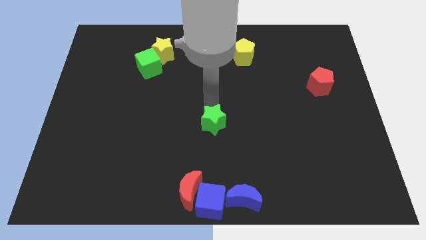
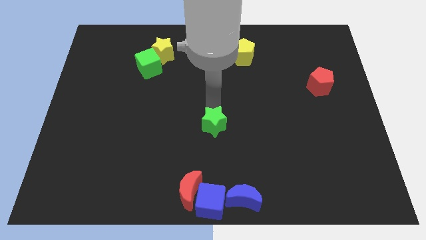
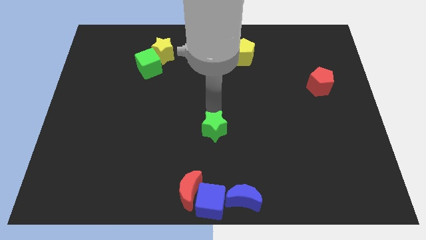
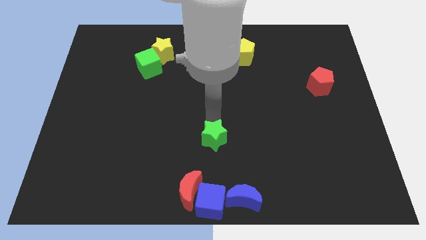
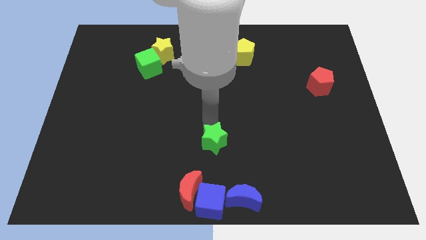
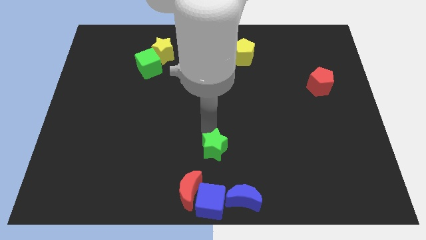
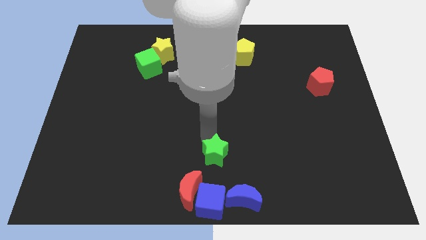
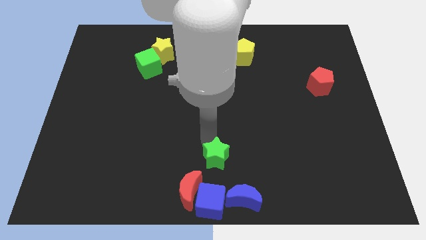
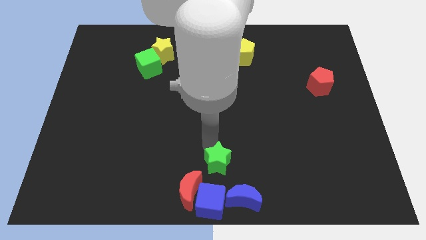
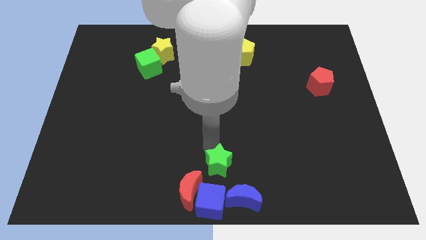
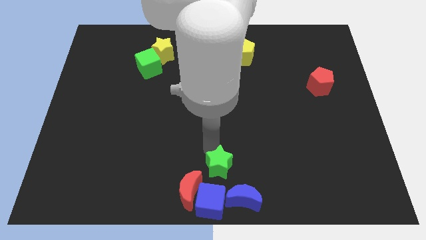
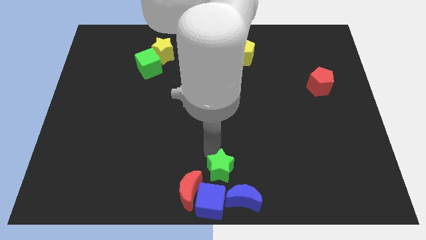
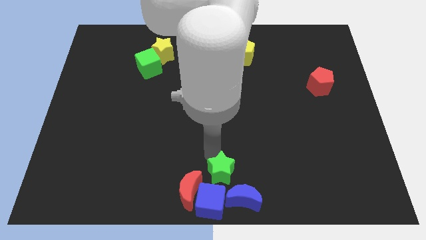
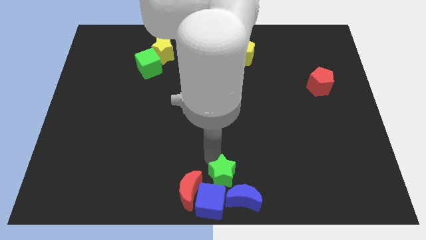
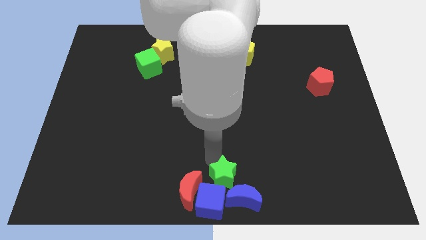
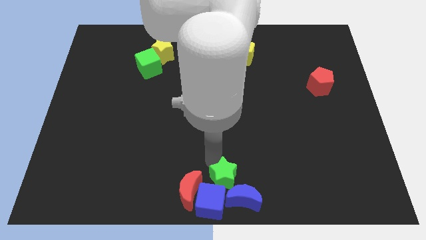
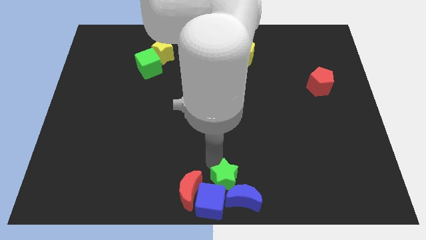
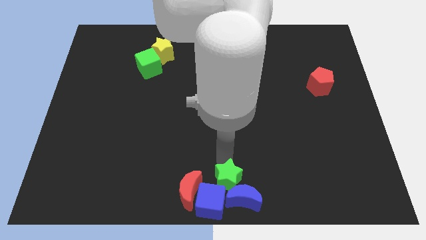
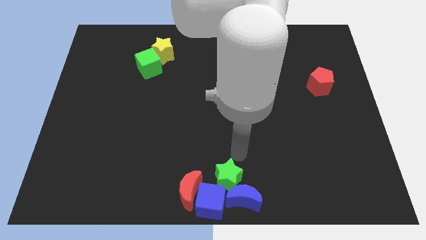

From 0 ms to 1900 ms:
drag the green star close to the blue blocks

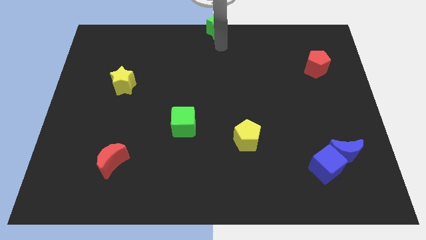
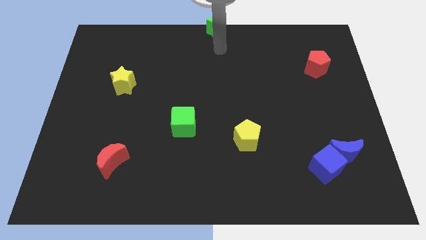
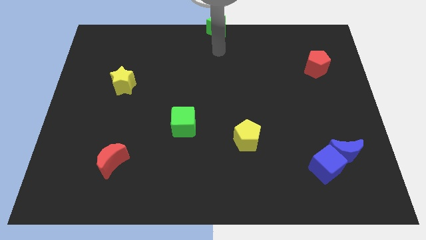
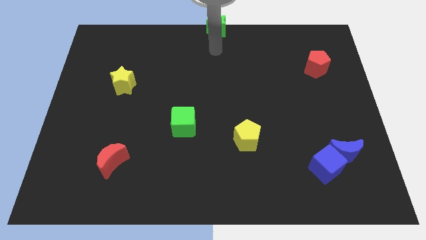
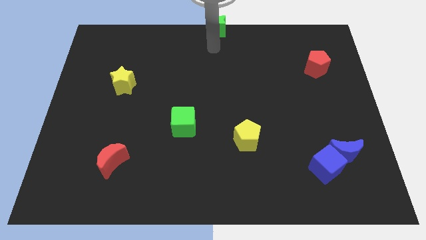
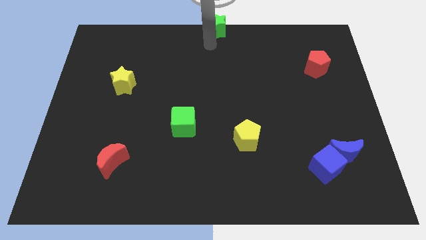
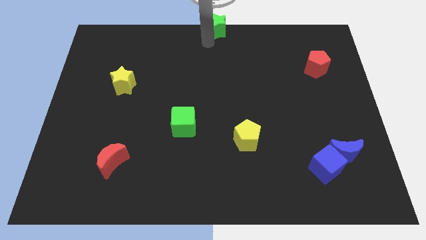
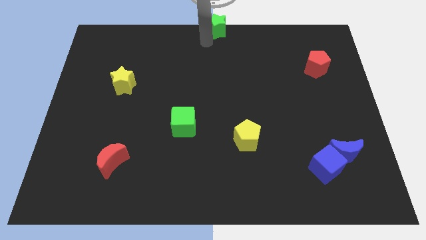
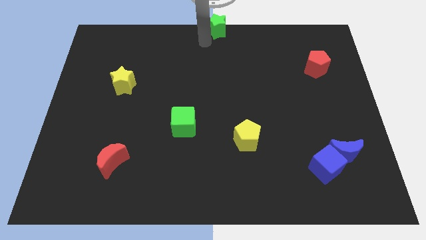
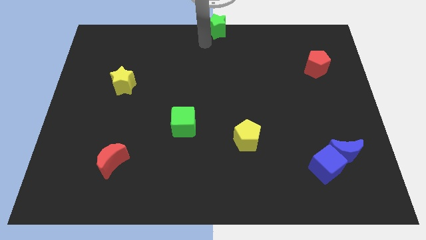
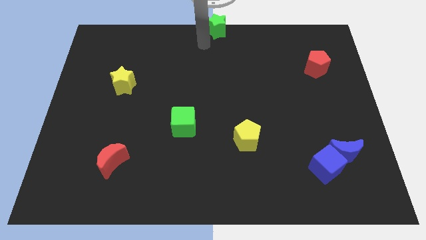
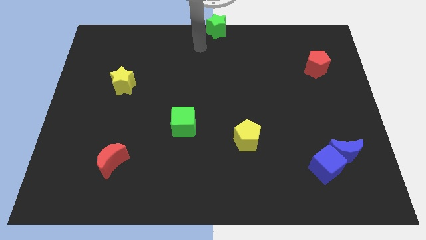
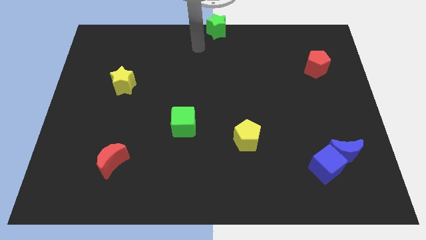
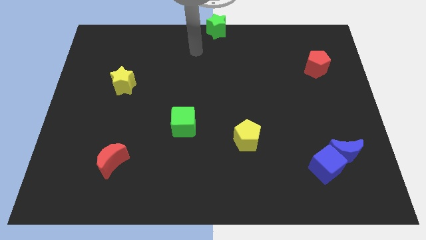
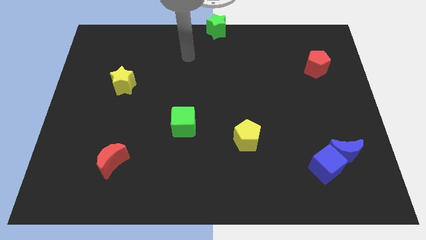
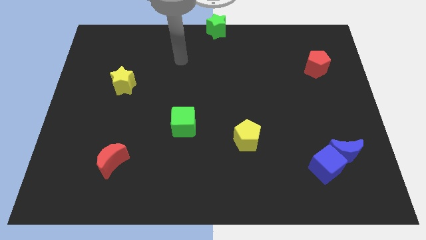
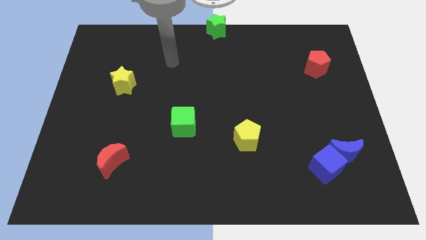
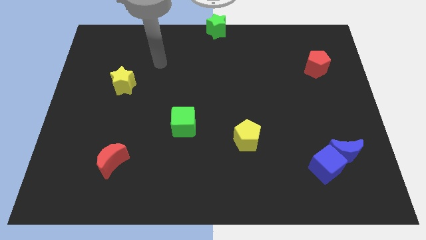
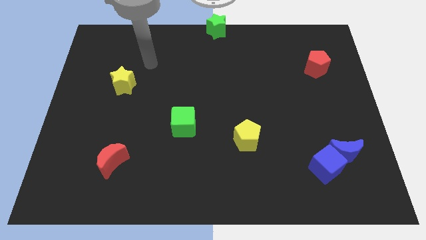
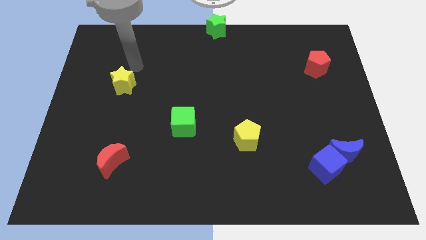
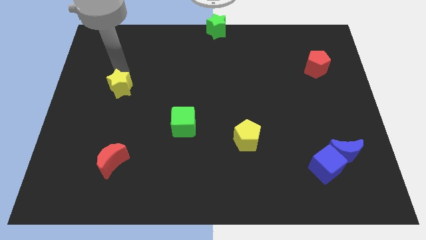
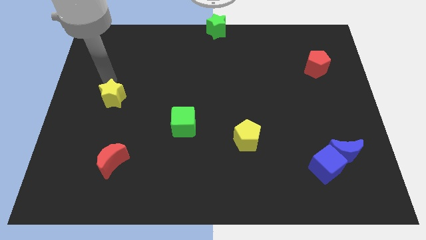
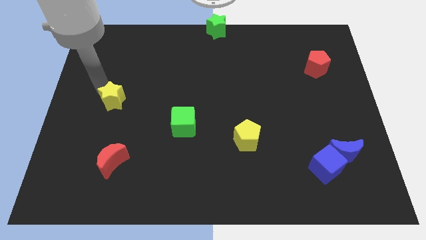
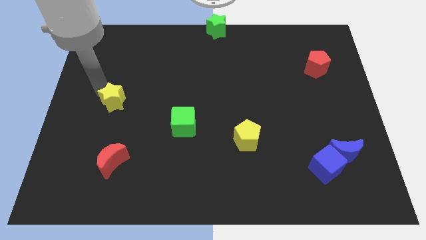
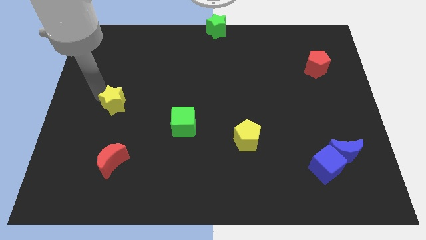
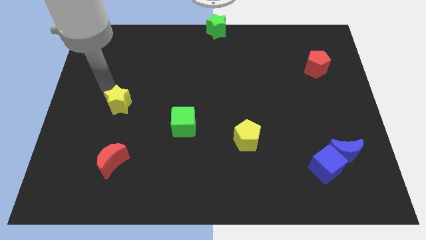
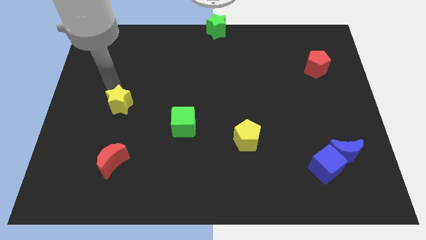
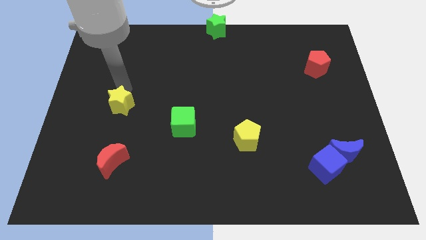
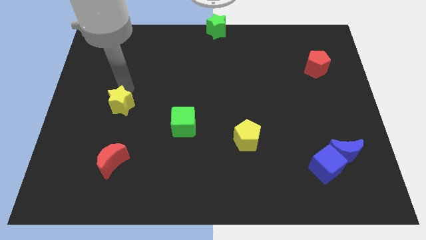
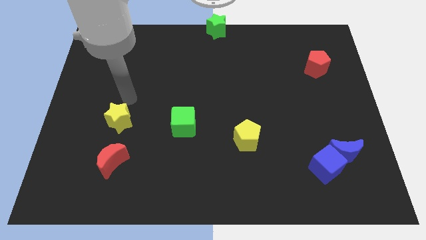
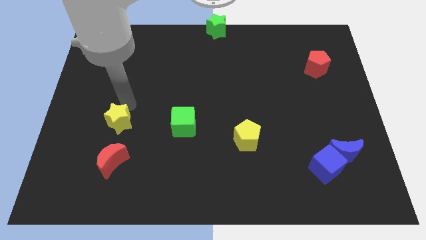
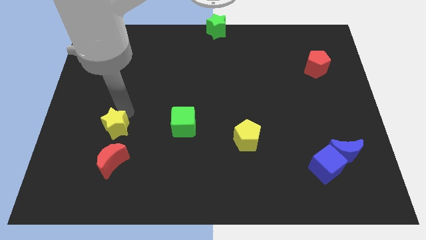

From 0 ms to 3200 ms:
place the yellow star to the left side of the green cube

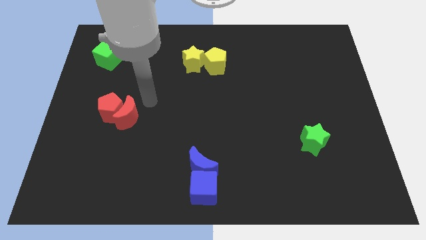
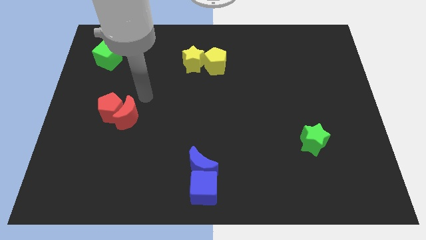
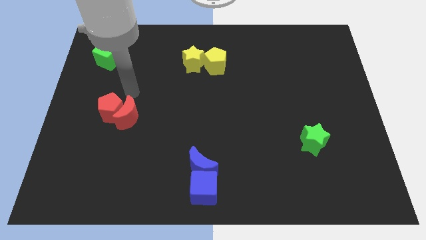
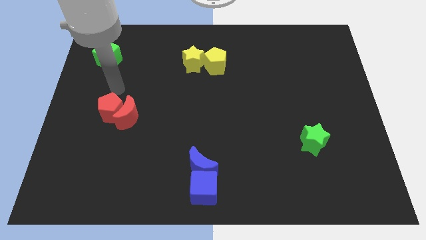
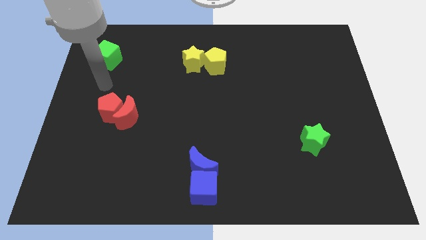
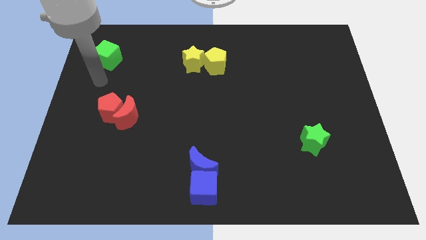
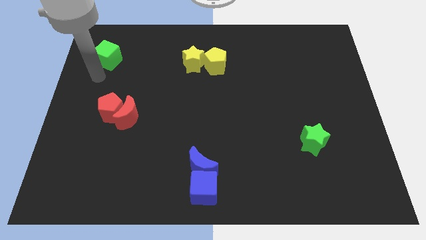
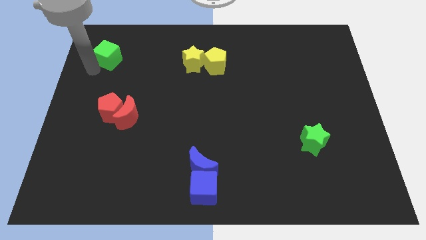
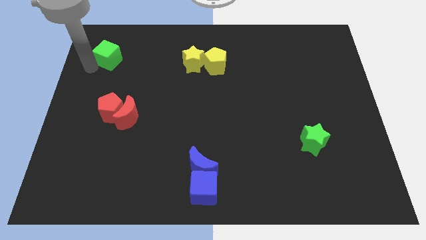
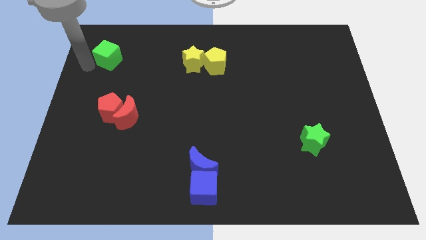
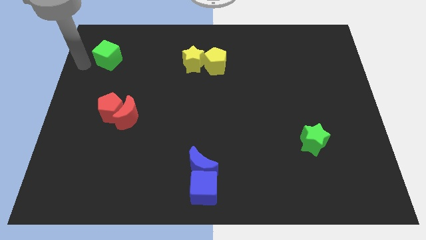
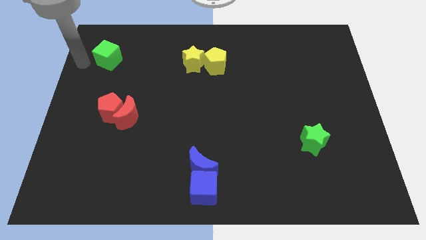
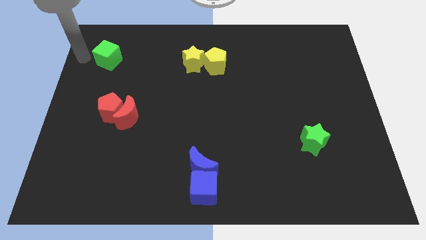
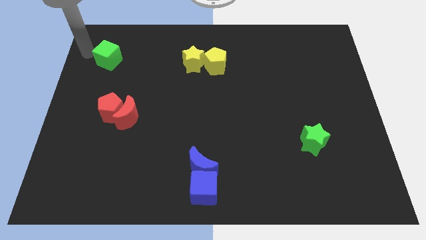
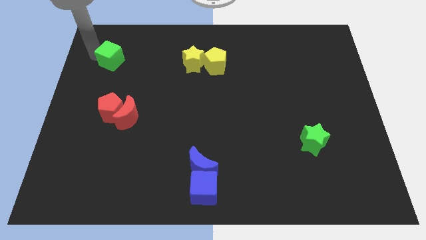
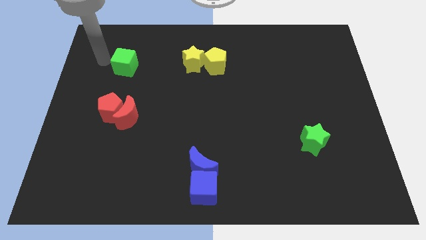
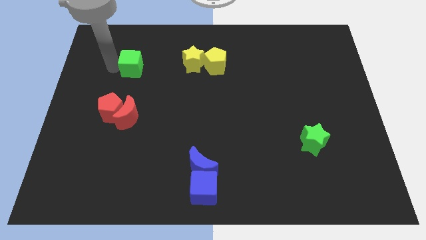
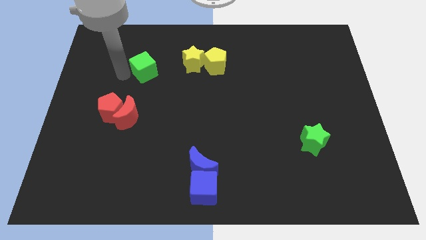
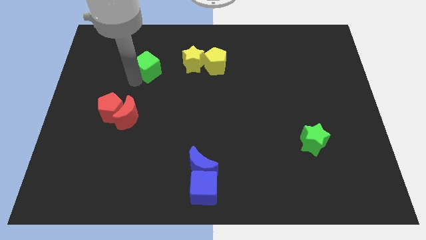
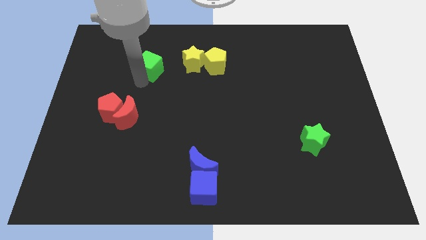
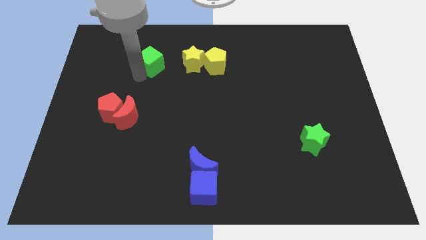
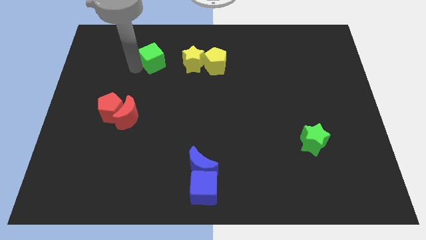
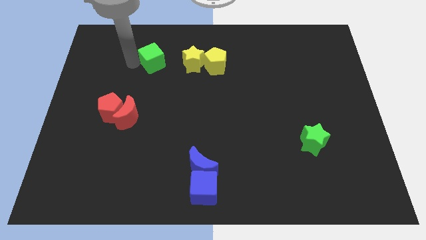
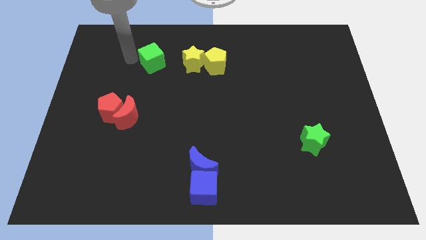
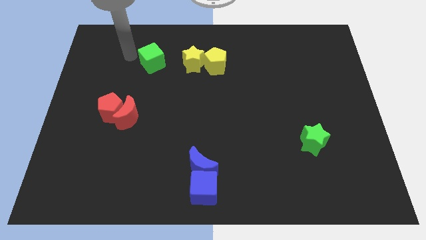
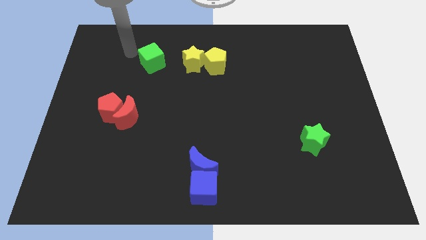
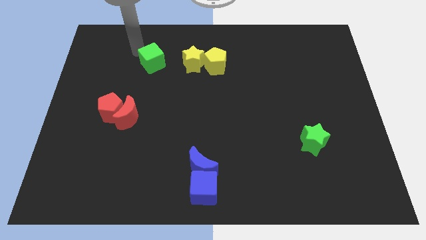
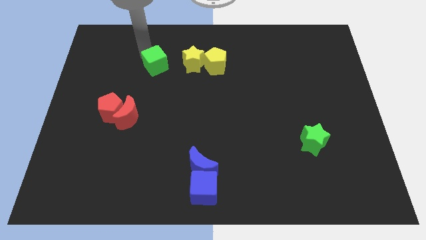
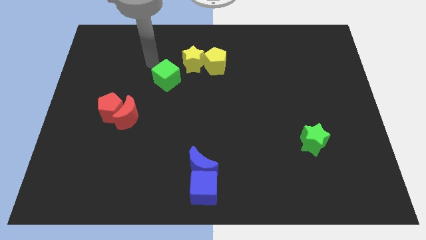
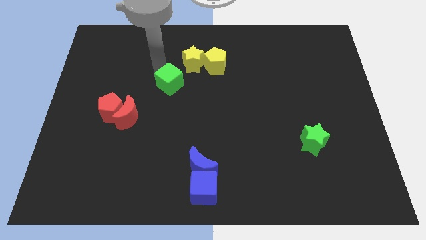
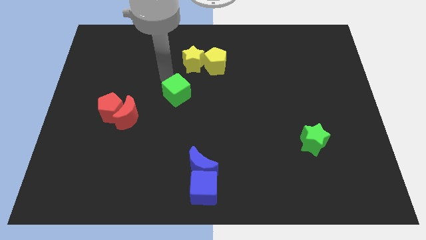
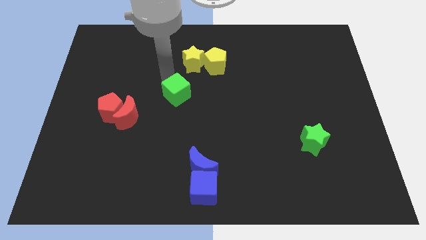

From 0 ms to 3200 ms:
push the green cube diagonal to red crescent

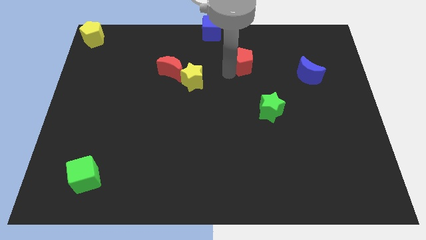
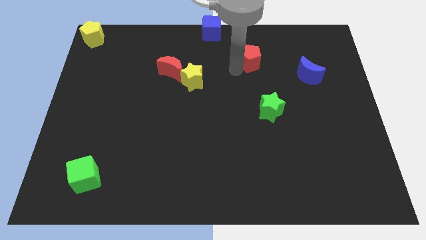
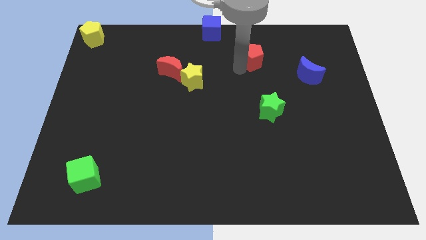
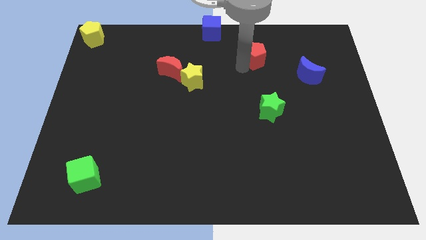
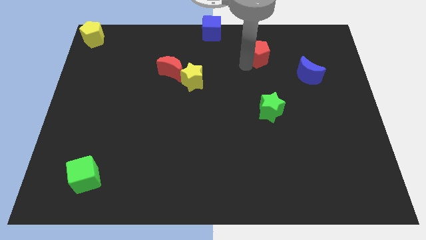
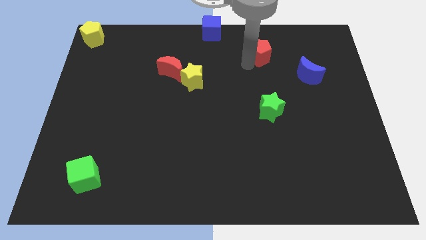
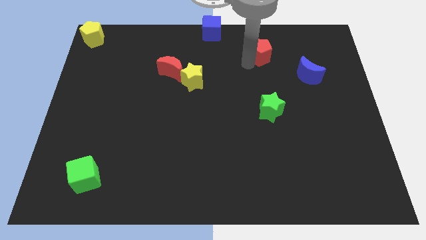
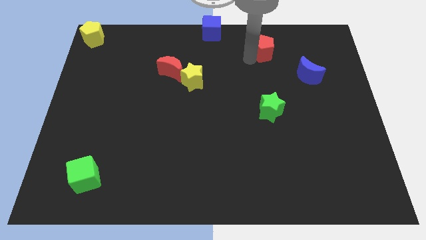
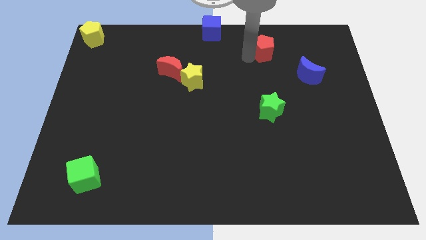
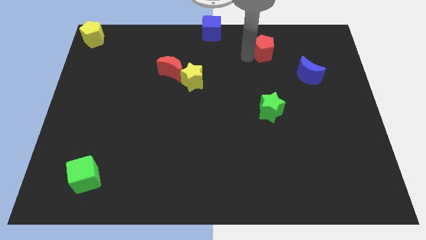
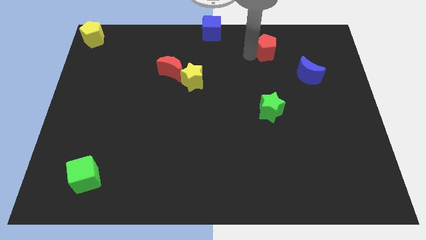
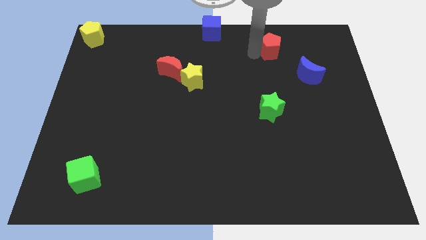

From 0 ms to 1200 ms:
move red moon diagonally to the blue moon
